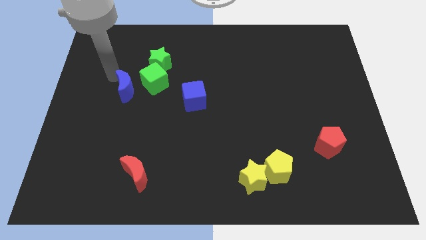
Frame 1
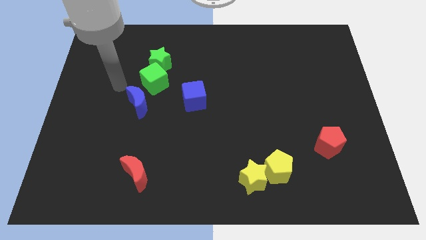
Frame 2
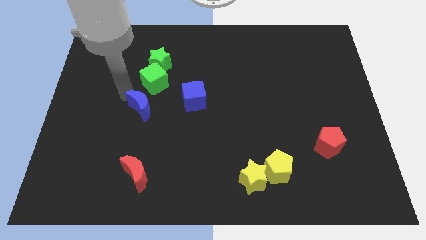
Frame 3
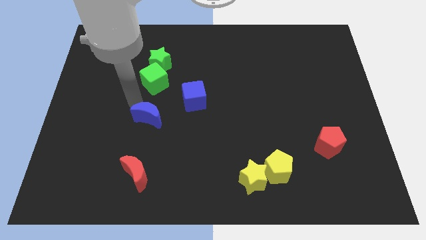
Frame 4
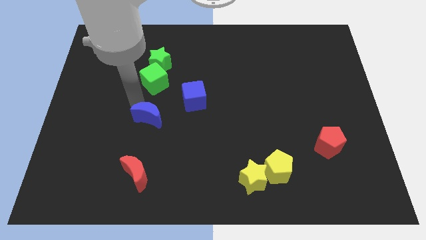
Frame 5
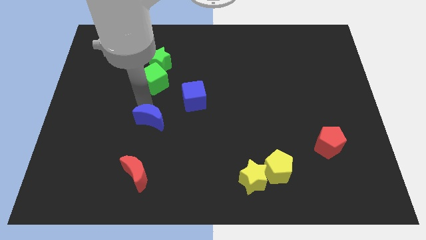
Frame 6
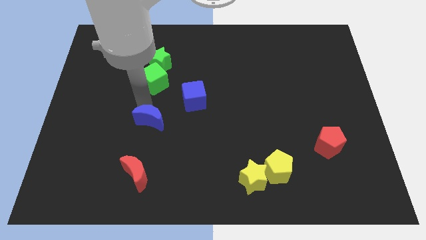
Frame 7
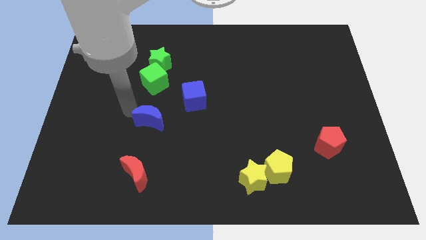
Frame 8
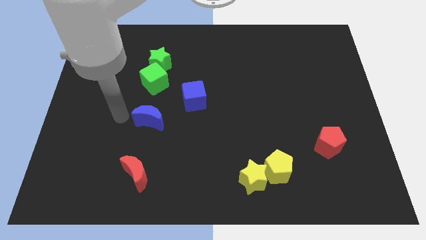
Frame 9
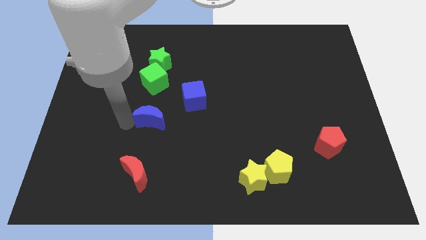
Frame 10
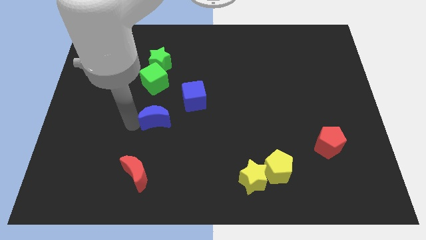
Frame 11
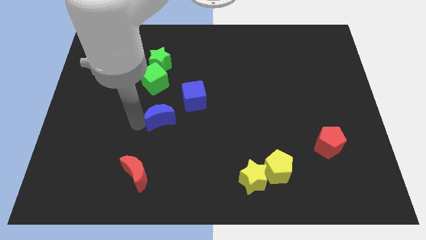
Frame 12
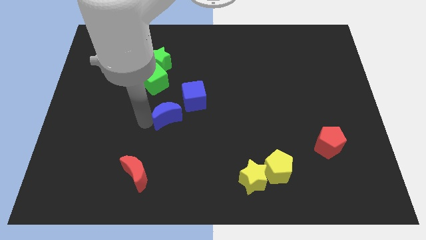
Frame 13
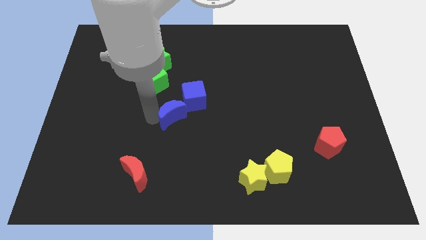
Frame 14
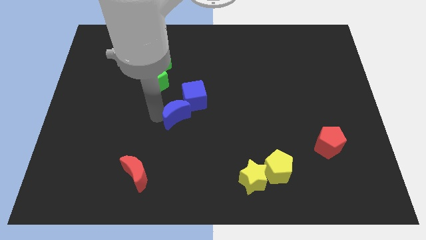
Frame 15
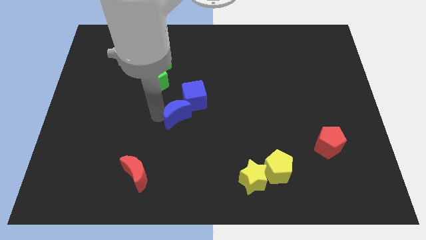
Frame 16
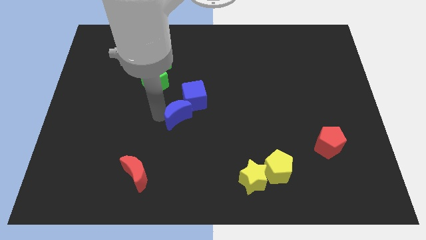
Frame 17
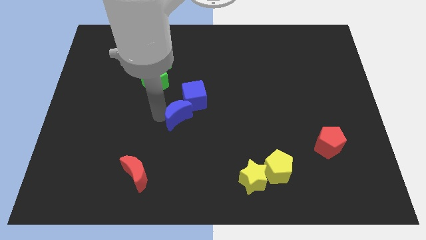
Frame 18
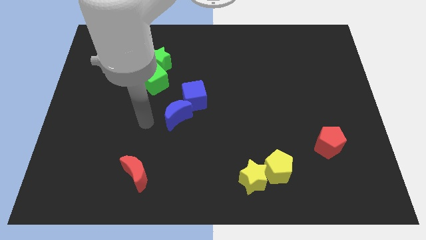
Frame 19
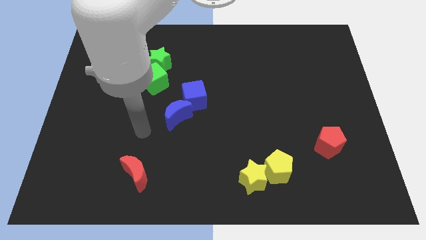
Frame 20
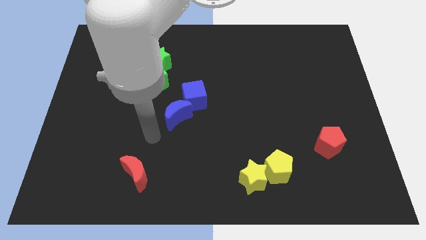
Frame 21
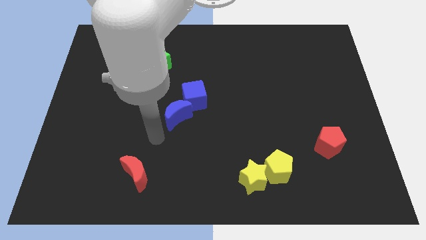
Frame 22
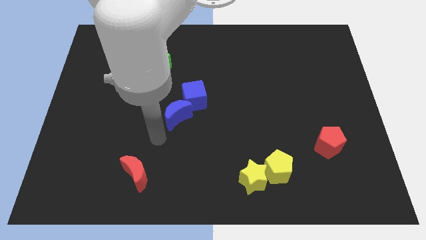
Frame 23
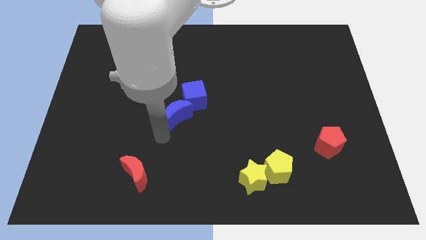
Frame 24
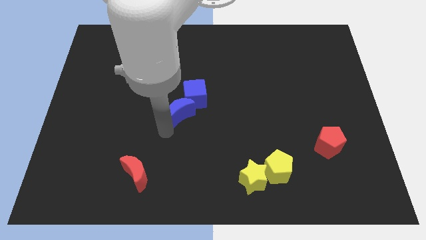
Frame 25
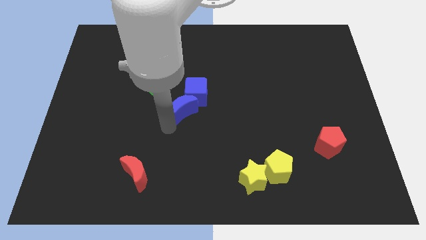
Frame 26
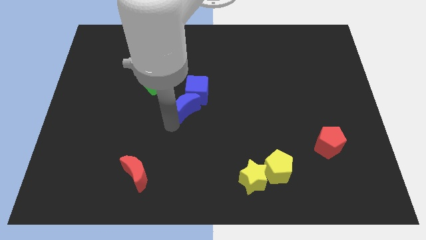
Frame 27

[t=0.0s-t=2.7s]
place blue crescent below blue cube

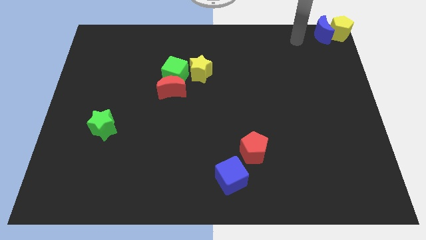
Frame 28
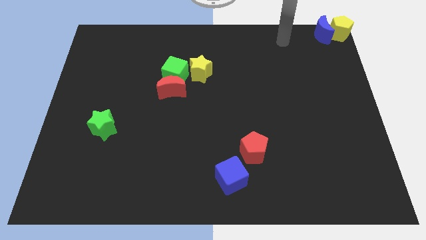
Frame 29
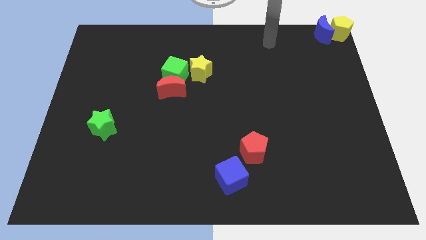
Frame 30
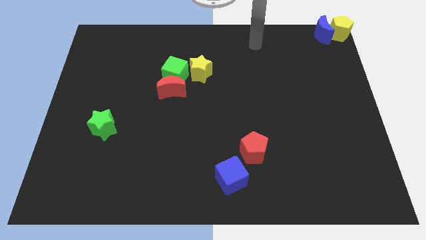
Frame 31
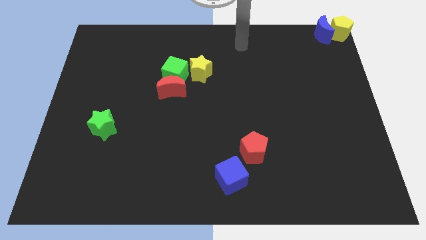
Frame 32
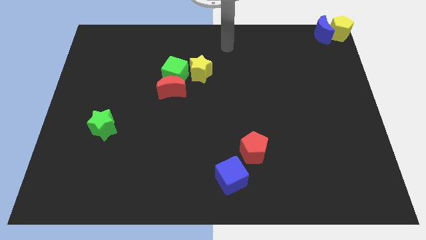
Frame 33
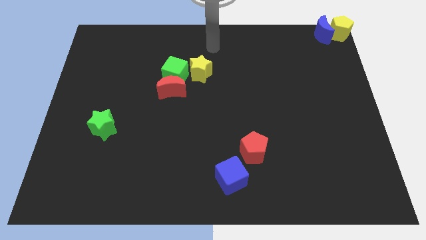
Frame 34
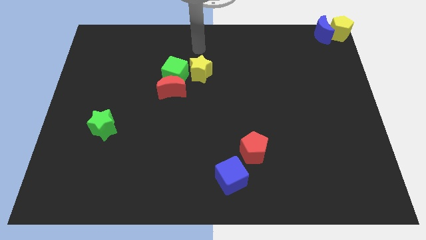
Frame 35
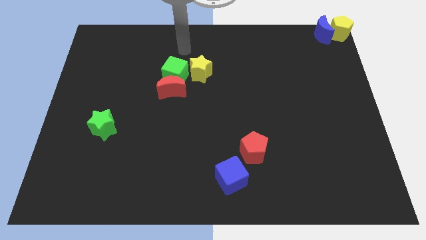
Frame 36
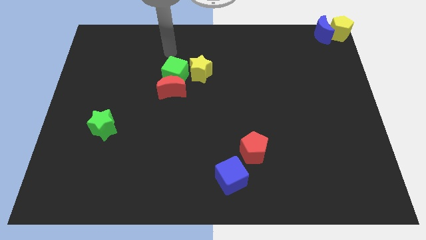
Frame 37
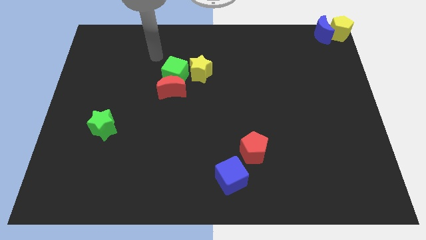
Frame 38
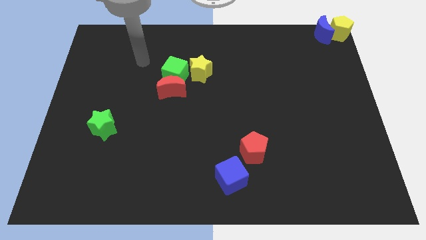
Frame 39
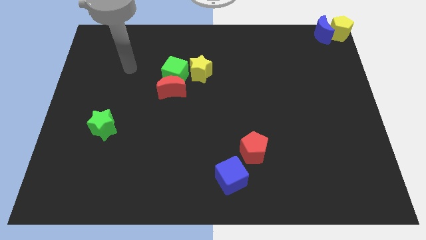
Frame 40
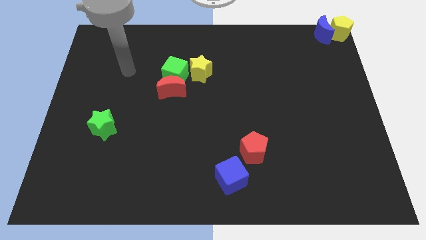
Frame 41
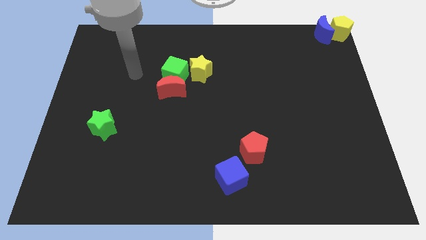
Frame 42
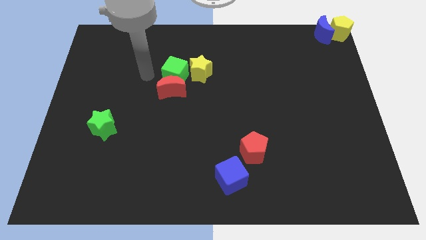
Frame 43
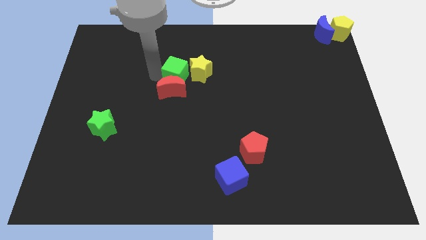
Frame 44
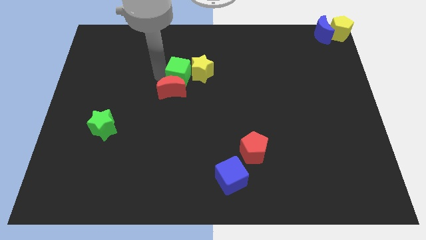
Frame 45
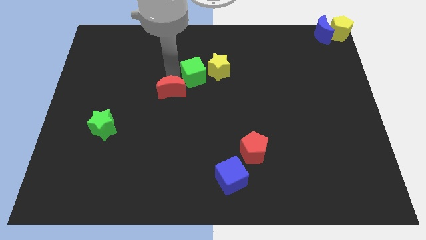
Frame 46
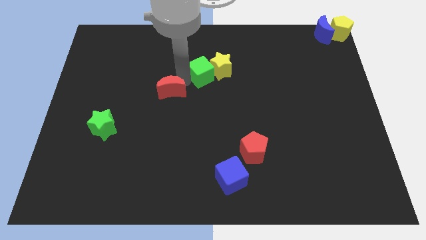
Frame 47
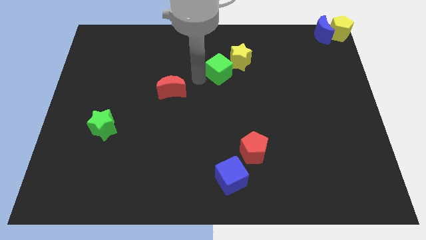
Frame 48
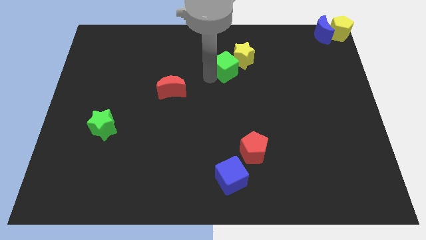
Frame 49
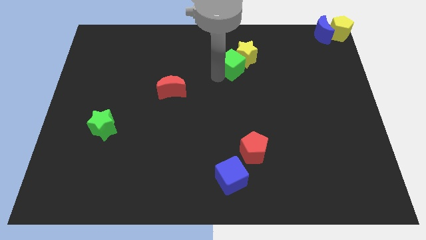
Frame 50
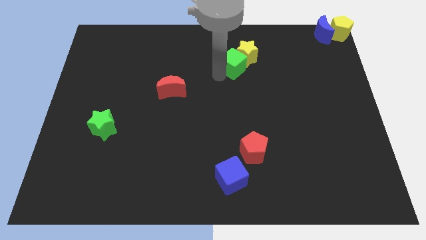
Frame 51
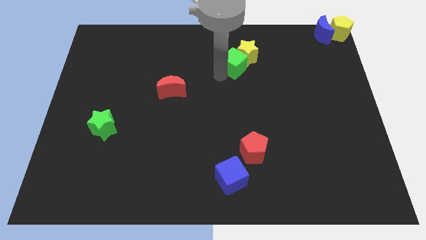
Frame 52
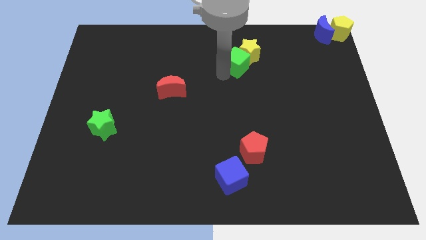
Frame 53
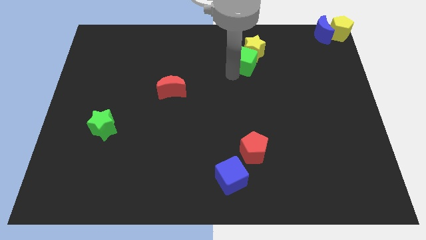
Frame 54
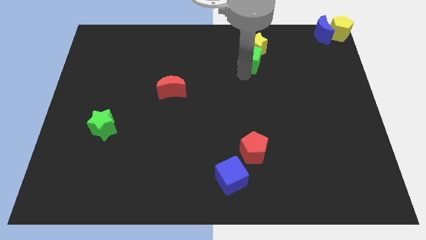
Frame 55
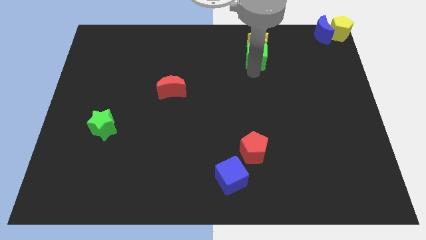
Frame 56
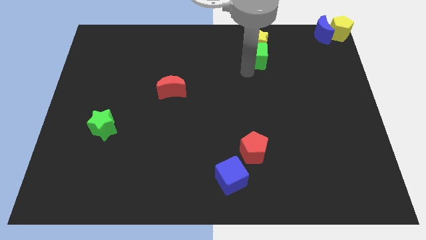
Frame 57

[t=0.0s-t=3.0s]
separate the green cube from red moon

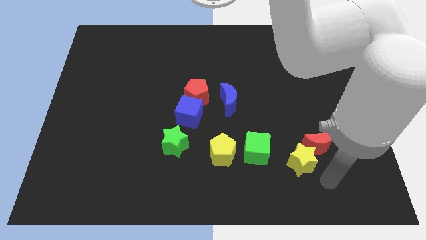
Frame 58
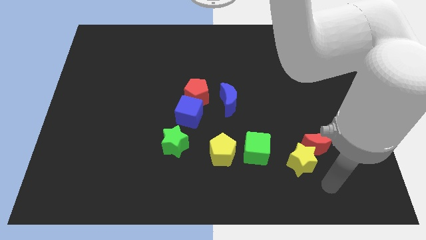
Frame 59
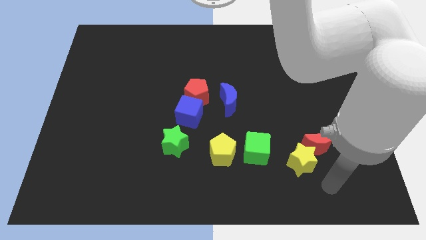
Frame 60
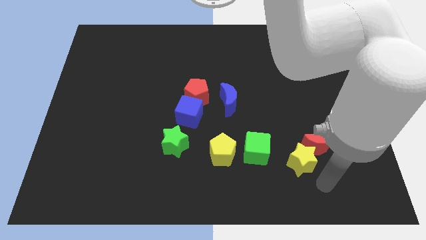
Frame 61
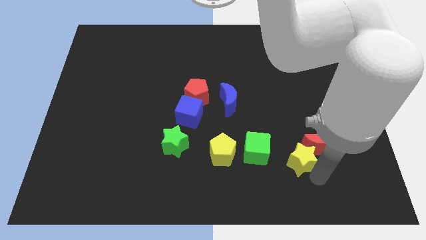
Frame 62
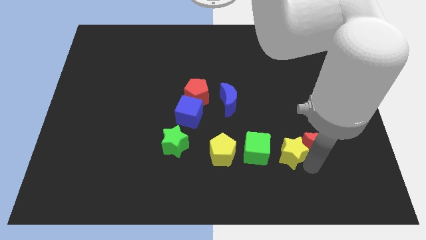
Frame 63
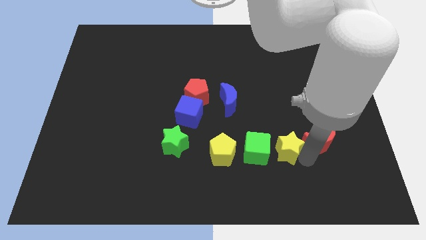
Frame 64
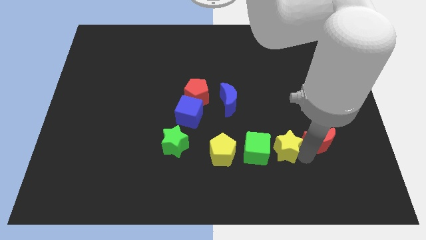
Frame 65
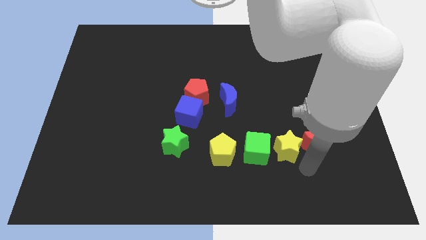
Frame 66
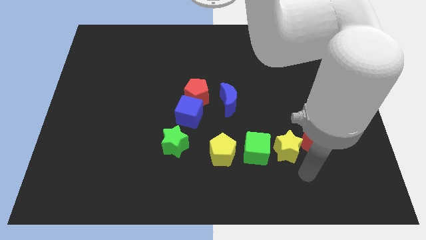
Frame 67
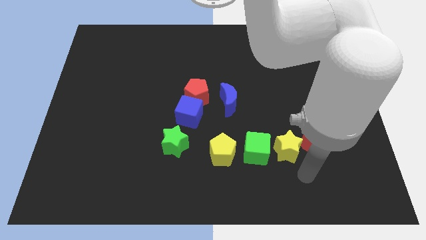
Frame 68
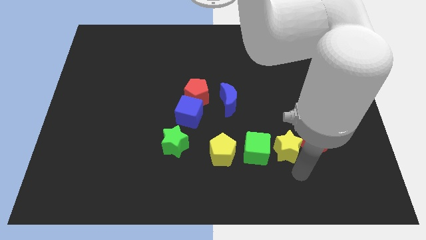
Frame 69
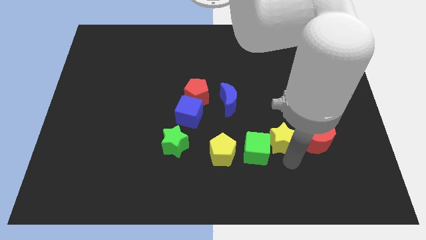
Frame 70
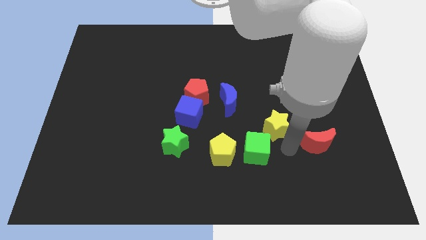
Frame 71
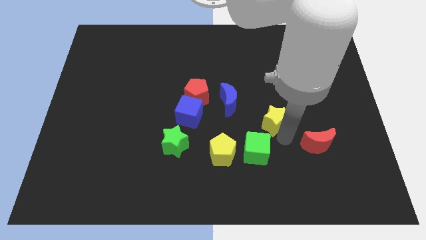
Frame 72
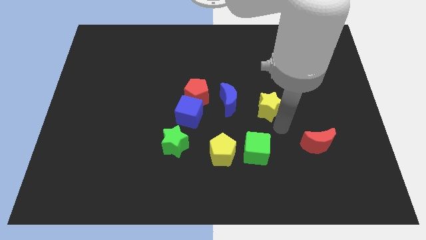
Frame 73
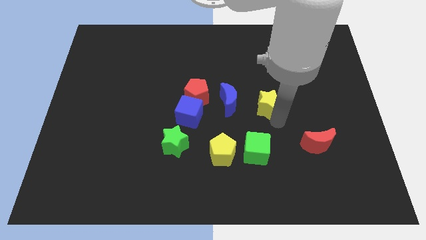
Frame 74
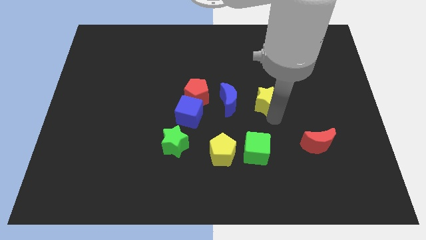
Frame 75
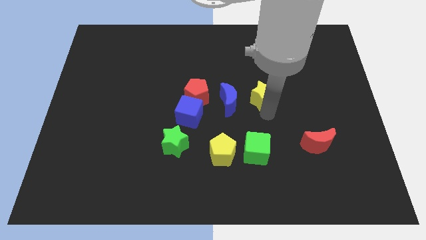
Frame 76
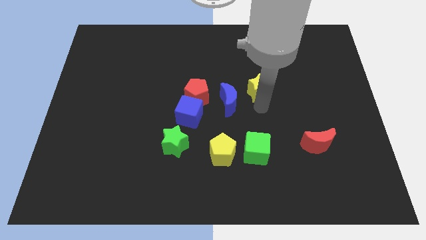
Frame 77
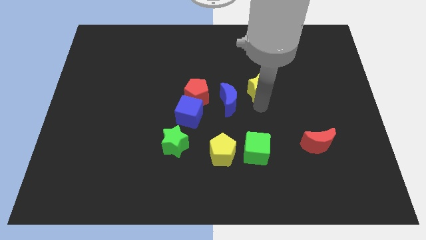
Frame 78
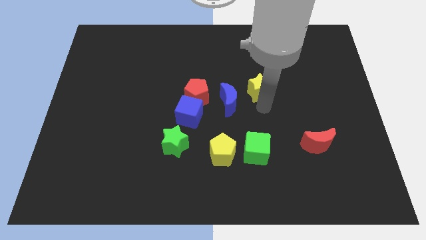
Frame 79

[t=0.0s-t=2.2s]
drag the yellow star to the right of the blue crescent

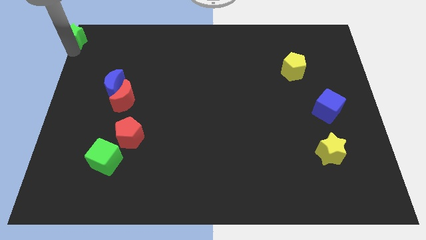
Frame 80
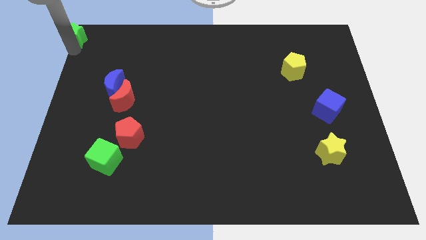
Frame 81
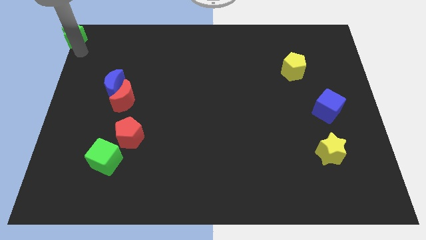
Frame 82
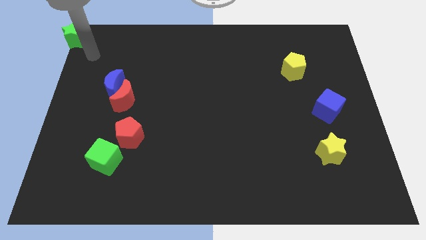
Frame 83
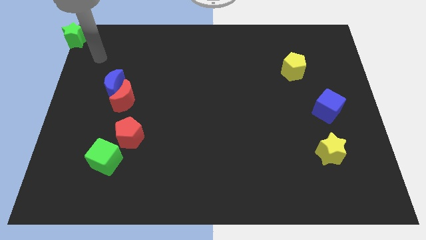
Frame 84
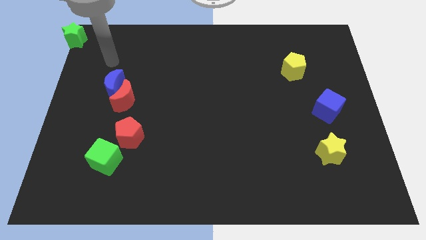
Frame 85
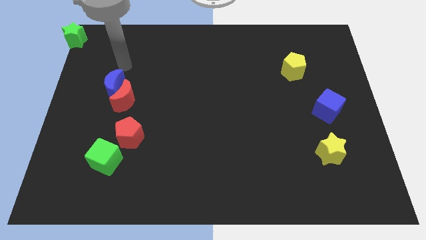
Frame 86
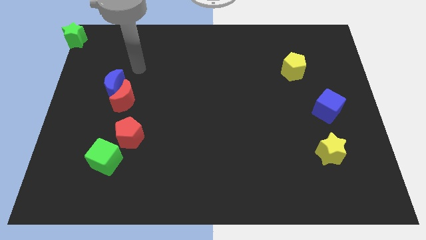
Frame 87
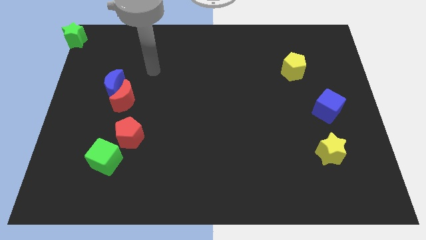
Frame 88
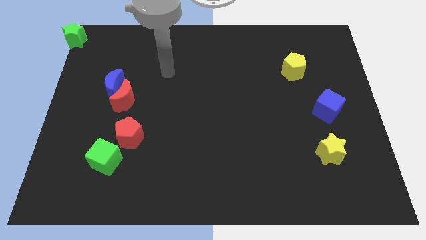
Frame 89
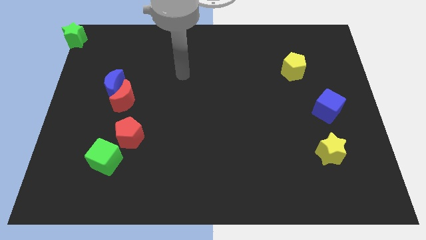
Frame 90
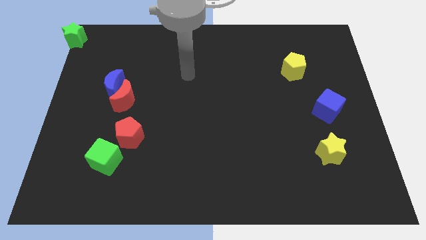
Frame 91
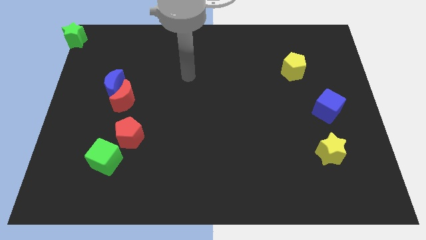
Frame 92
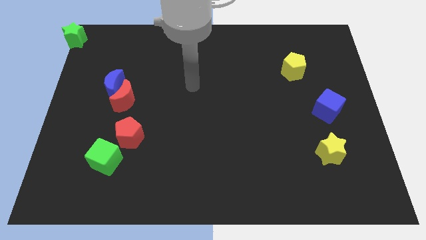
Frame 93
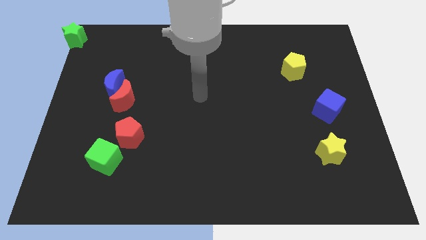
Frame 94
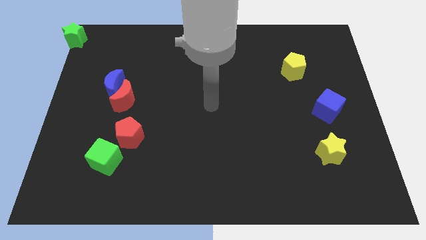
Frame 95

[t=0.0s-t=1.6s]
move the arm to the center
